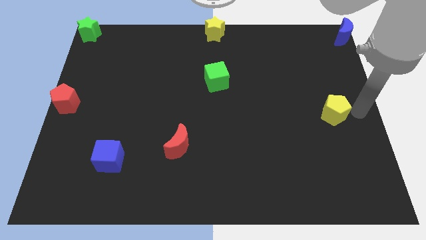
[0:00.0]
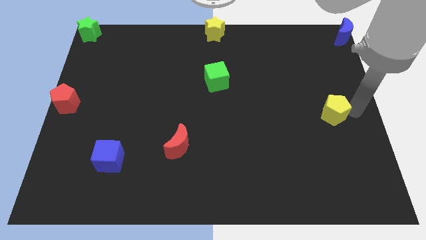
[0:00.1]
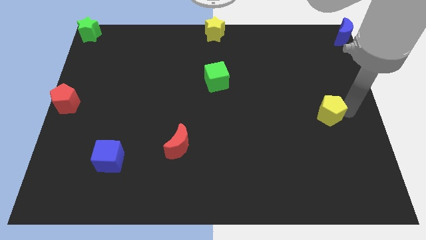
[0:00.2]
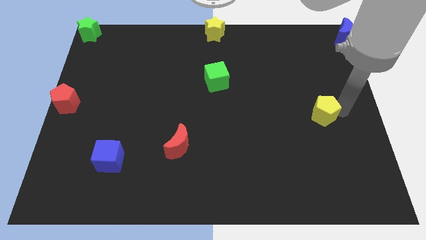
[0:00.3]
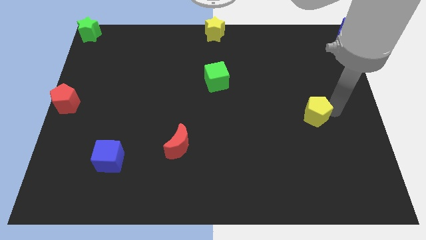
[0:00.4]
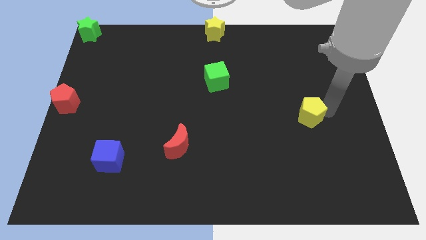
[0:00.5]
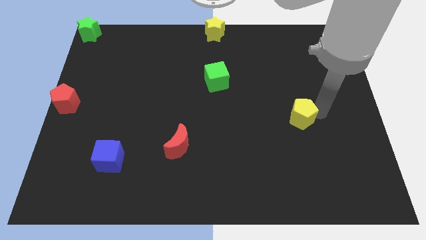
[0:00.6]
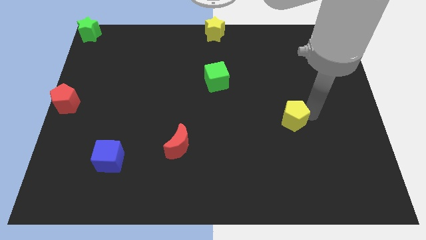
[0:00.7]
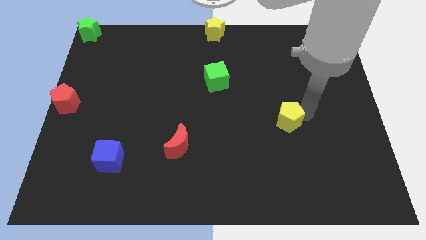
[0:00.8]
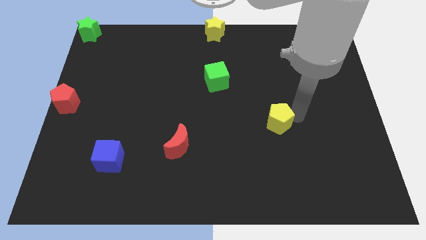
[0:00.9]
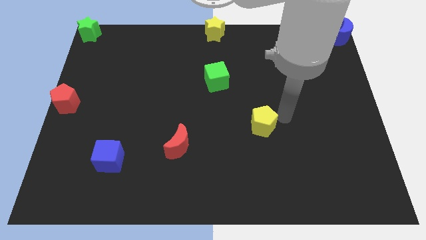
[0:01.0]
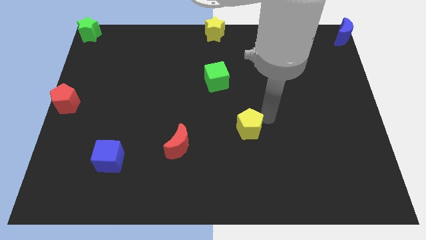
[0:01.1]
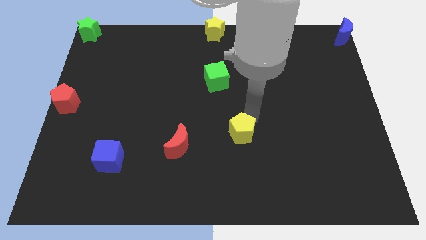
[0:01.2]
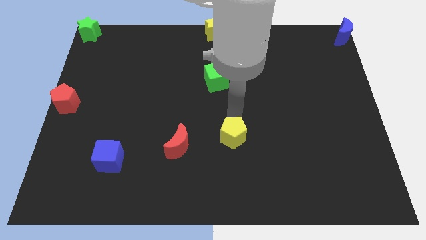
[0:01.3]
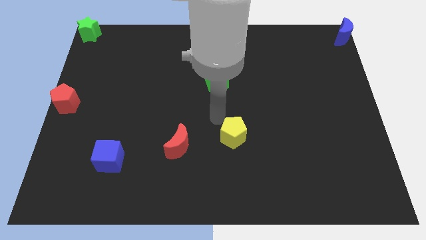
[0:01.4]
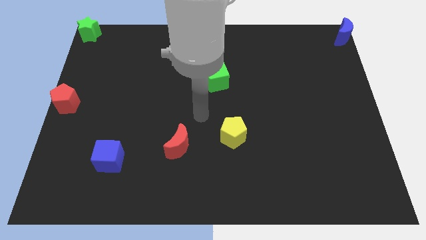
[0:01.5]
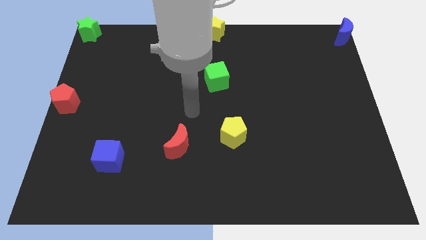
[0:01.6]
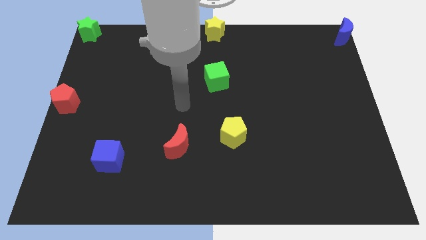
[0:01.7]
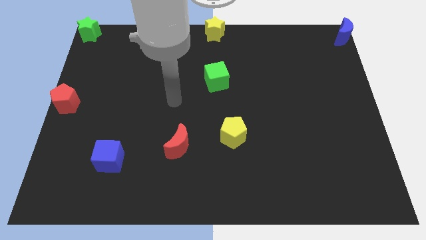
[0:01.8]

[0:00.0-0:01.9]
place the yellow pentagon towards the center of the board

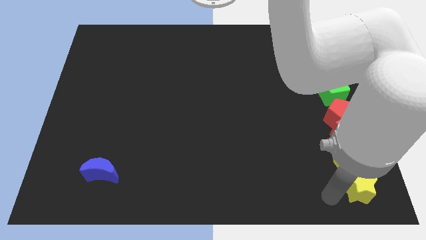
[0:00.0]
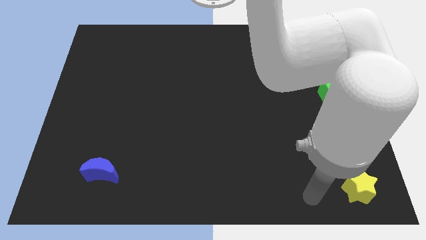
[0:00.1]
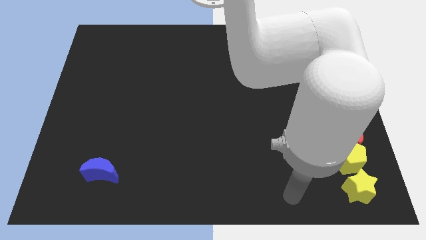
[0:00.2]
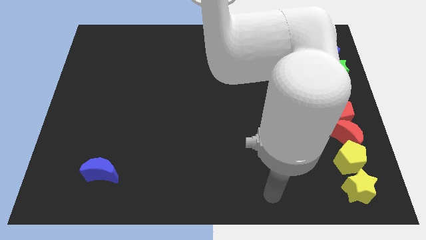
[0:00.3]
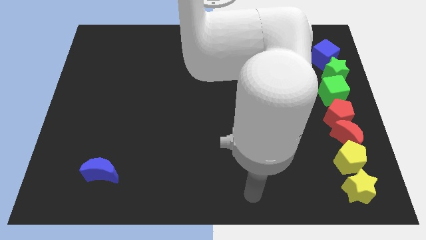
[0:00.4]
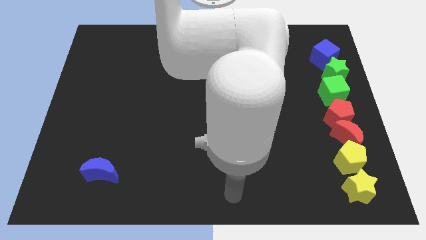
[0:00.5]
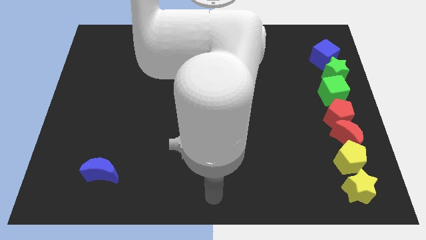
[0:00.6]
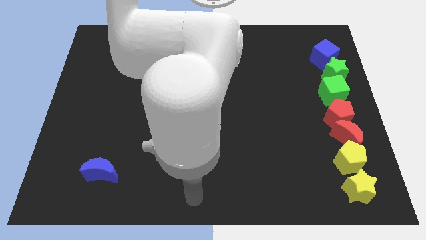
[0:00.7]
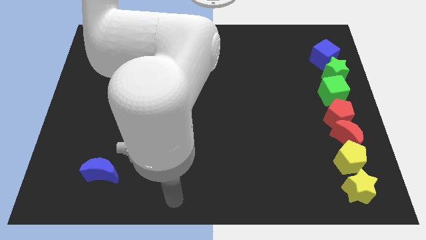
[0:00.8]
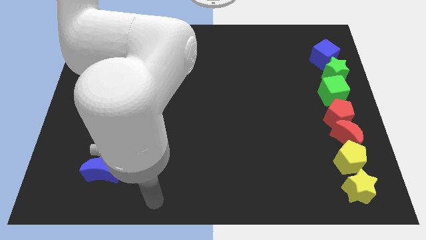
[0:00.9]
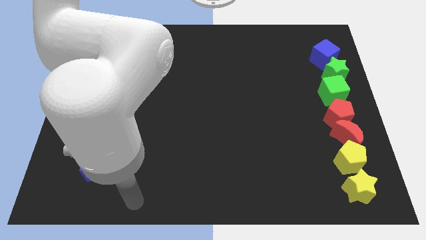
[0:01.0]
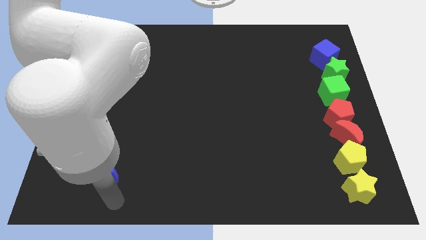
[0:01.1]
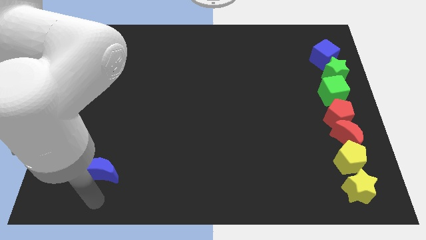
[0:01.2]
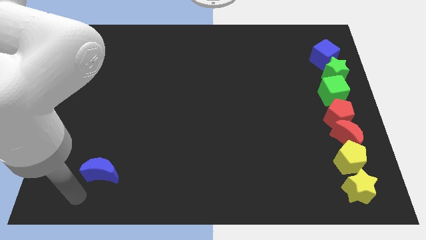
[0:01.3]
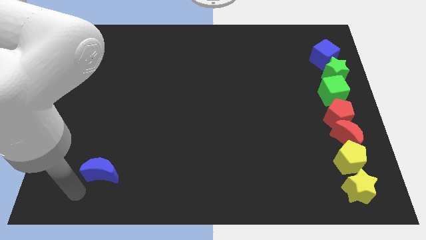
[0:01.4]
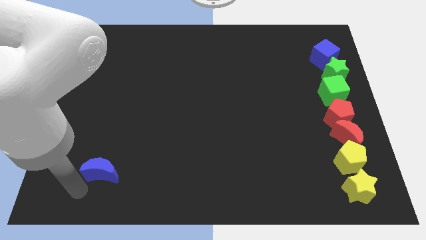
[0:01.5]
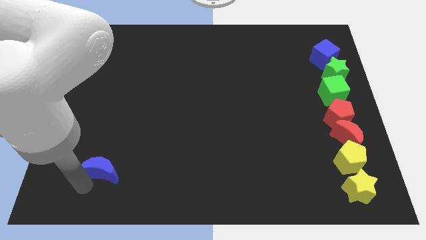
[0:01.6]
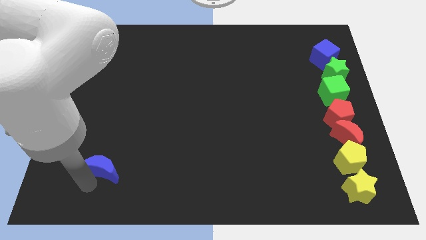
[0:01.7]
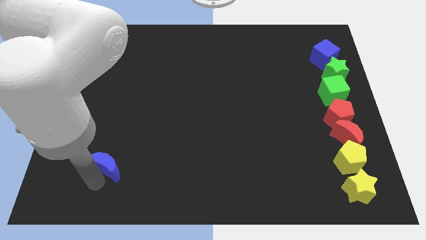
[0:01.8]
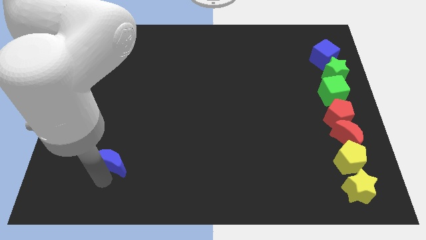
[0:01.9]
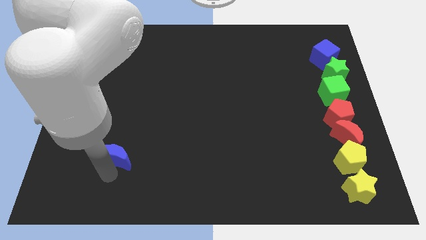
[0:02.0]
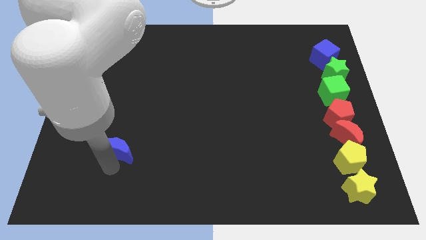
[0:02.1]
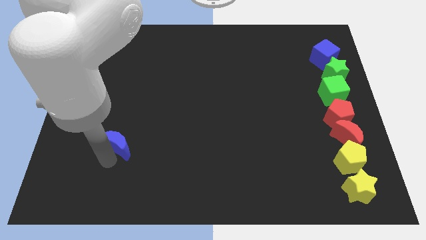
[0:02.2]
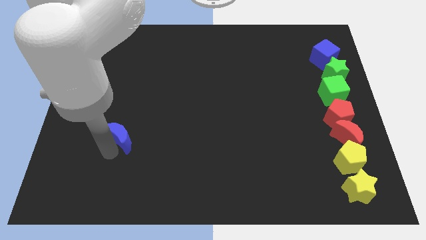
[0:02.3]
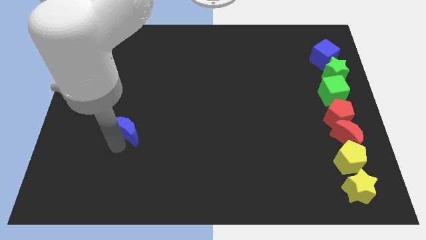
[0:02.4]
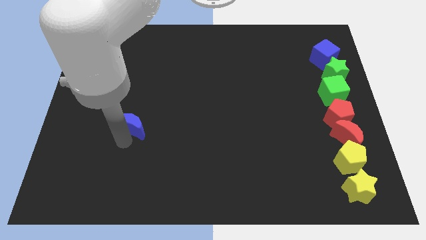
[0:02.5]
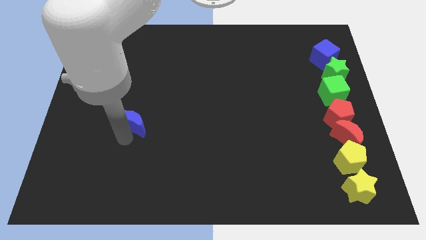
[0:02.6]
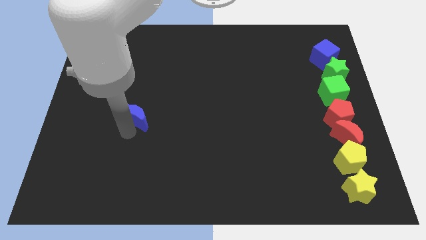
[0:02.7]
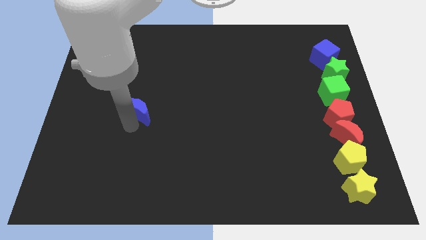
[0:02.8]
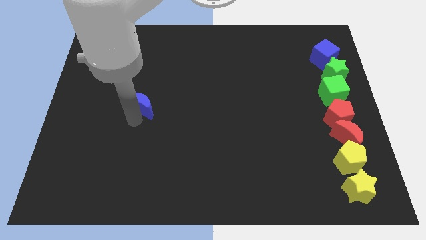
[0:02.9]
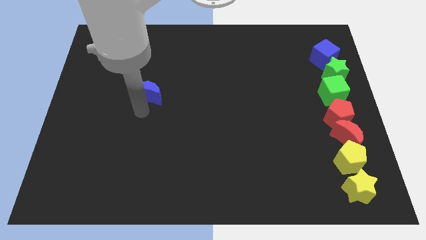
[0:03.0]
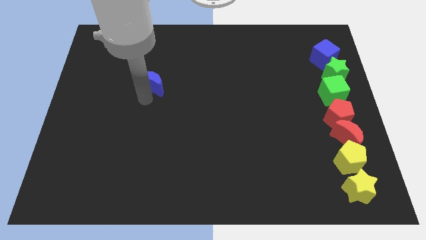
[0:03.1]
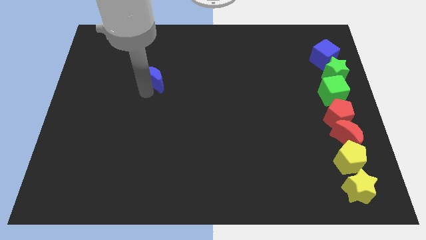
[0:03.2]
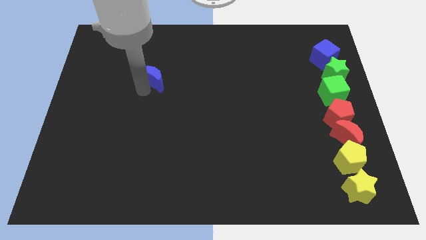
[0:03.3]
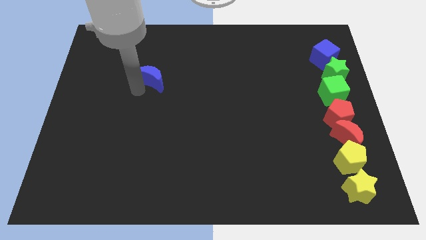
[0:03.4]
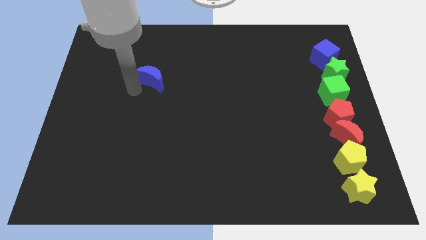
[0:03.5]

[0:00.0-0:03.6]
move the blue crescent towards the top of the board

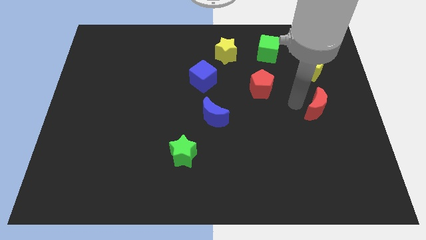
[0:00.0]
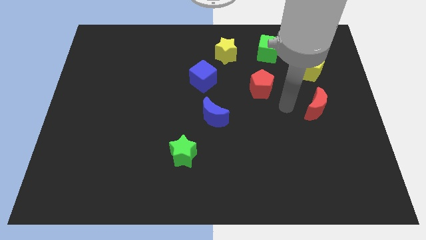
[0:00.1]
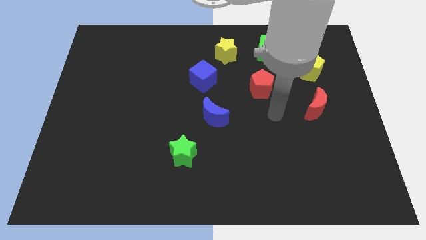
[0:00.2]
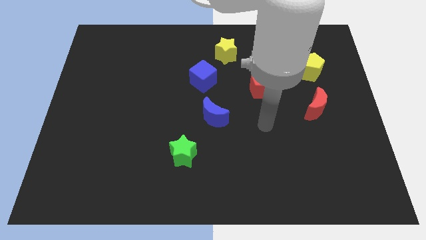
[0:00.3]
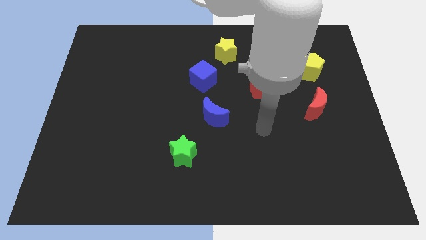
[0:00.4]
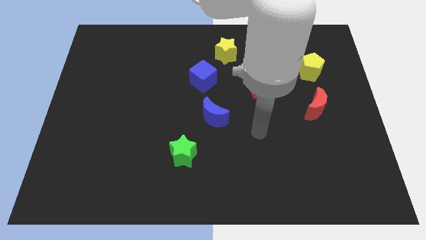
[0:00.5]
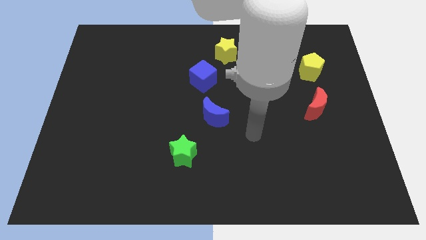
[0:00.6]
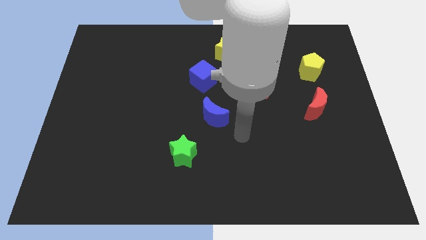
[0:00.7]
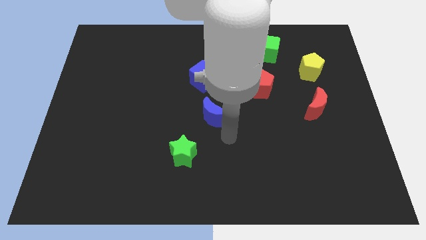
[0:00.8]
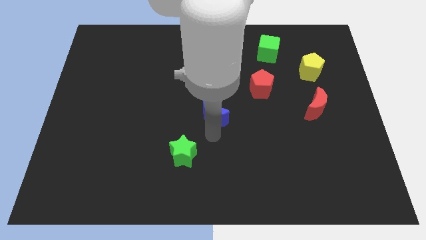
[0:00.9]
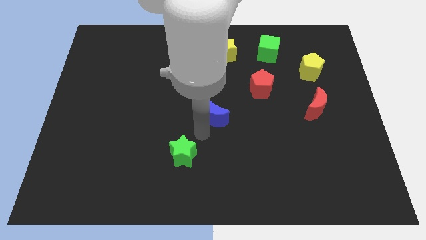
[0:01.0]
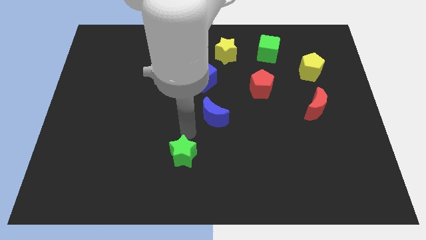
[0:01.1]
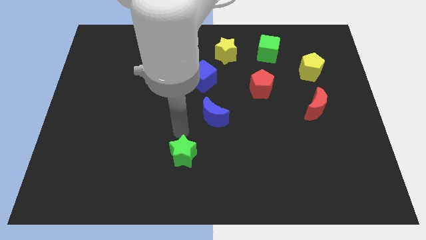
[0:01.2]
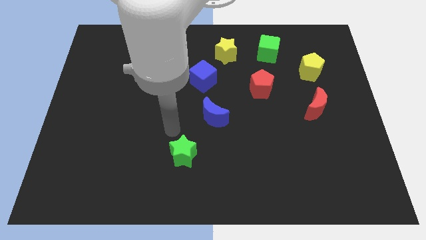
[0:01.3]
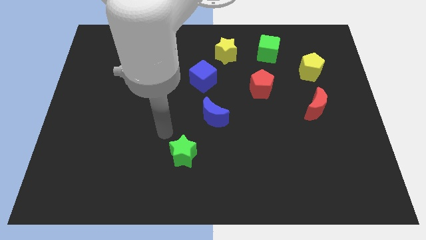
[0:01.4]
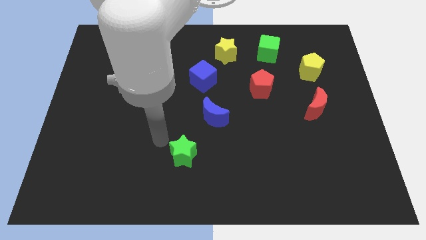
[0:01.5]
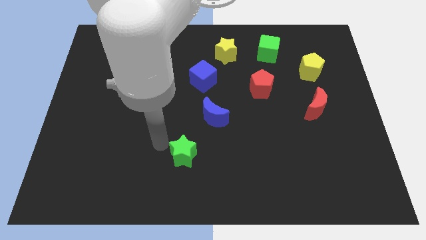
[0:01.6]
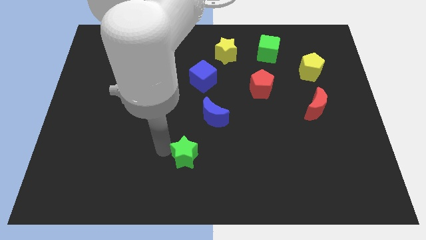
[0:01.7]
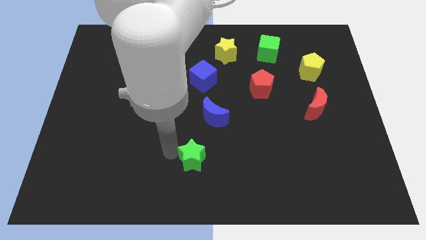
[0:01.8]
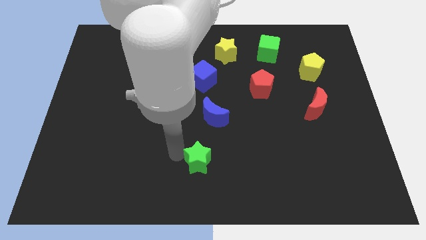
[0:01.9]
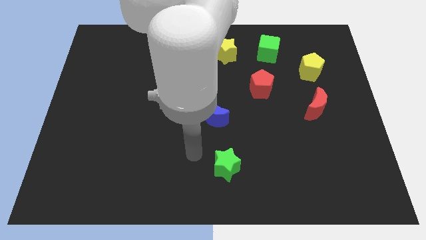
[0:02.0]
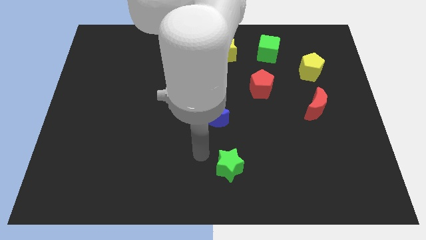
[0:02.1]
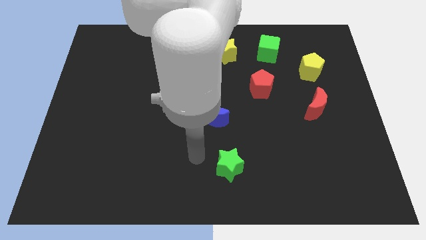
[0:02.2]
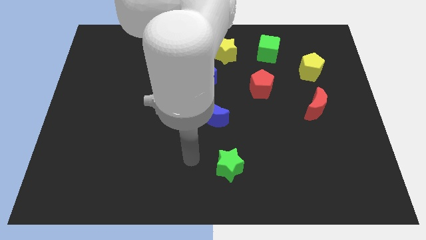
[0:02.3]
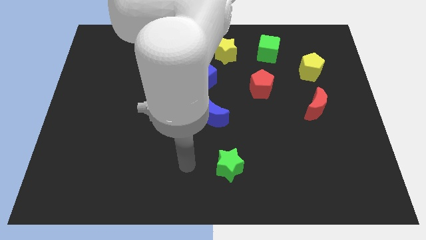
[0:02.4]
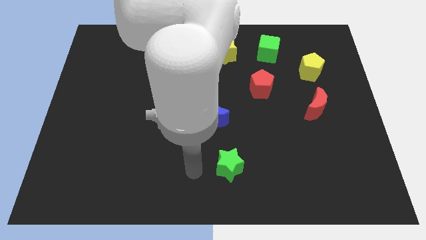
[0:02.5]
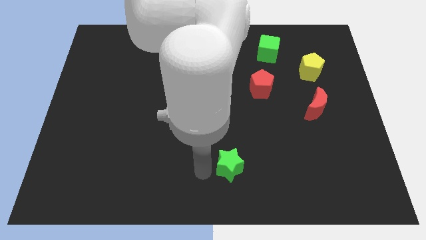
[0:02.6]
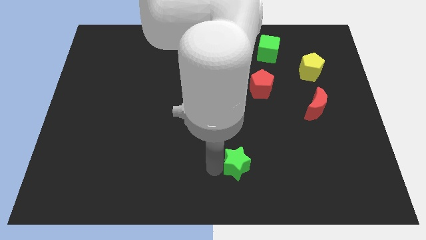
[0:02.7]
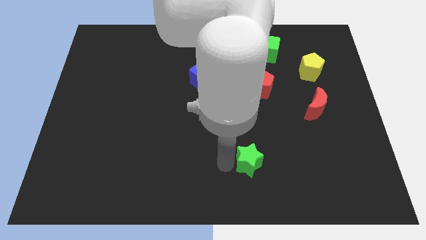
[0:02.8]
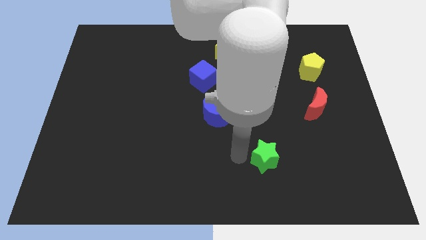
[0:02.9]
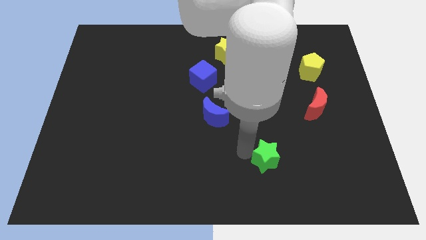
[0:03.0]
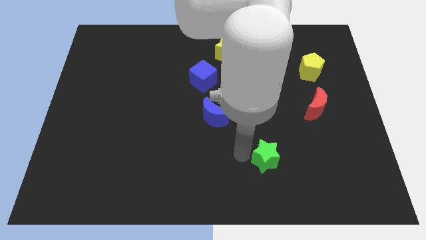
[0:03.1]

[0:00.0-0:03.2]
push the green star to the bottom of the red pentagon

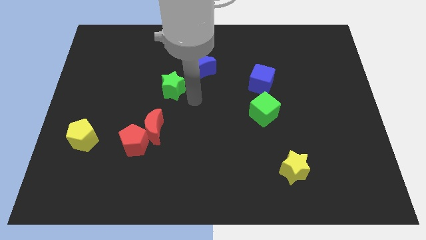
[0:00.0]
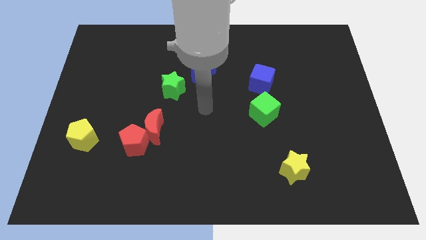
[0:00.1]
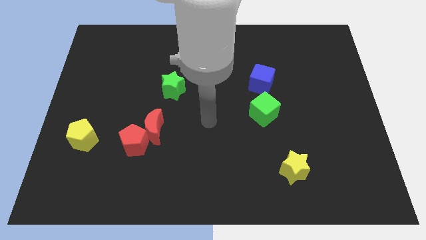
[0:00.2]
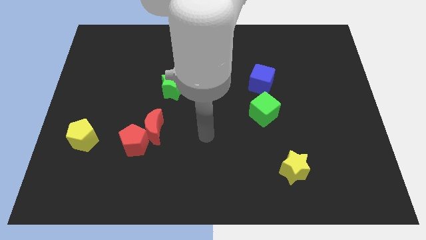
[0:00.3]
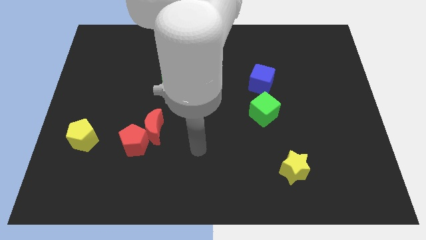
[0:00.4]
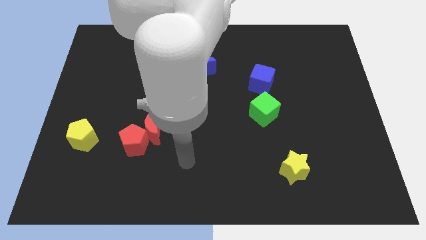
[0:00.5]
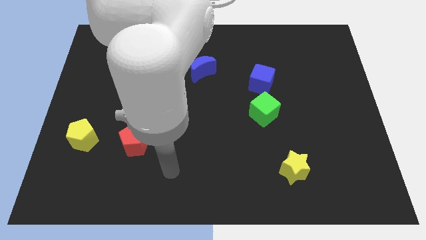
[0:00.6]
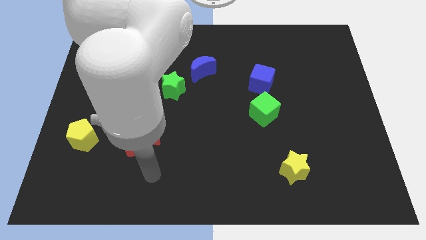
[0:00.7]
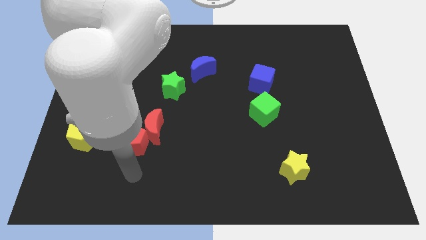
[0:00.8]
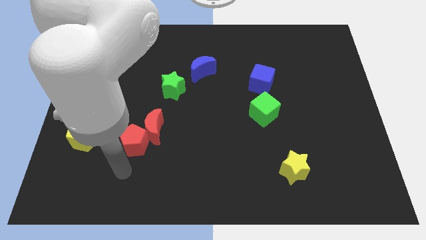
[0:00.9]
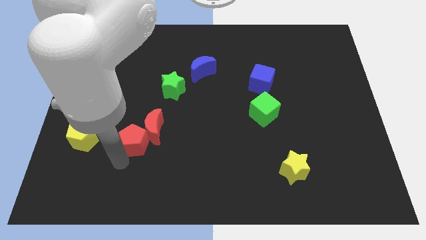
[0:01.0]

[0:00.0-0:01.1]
move your arm to the bottom of the red pentagon
